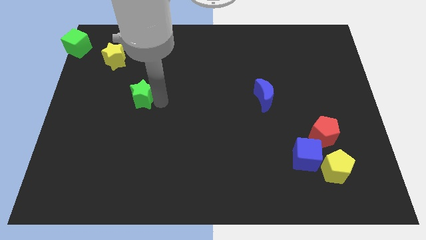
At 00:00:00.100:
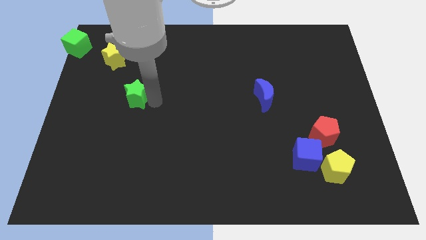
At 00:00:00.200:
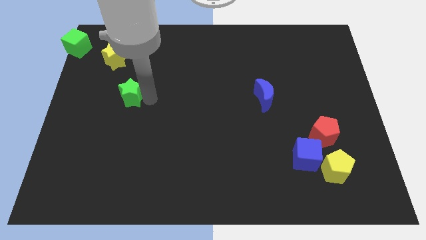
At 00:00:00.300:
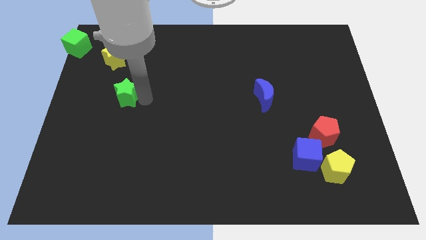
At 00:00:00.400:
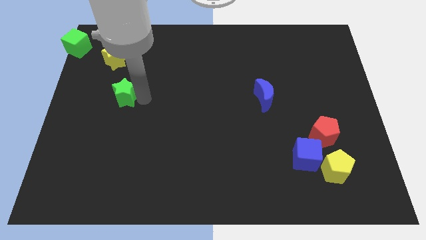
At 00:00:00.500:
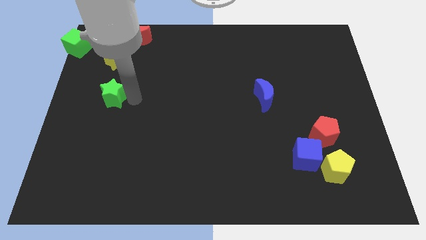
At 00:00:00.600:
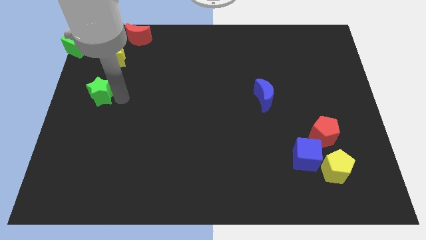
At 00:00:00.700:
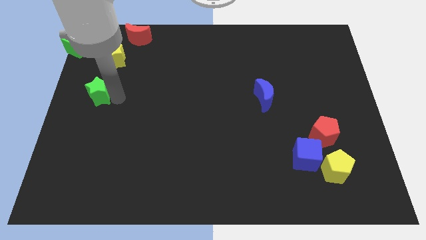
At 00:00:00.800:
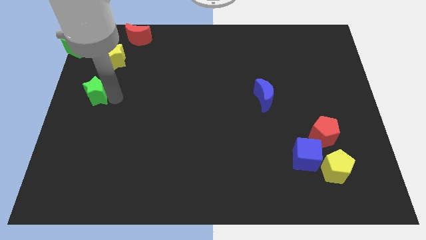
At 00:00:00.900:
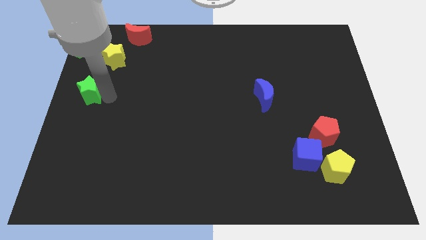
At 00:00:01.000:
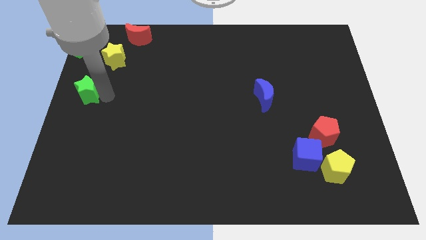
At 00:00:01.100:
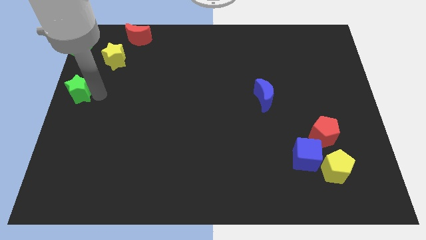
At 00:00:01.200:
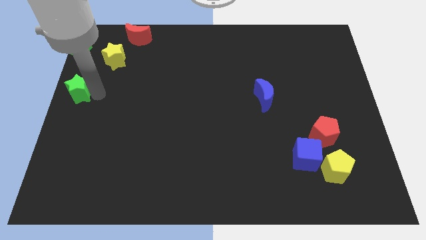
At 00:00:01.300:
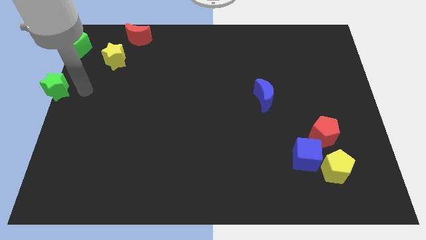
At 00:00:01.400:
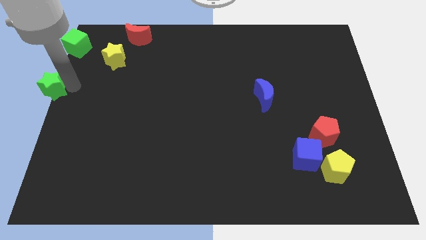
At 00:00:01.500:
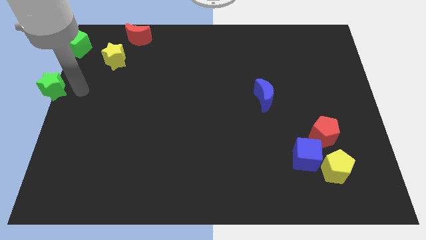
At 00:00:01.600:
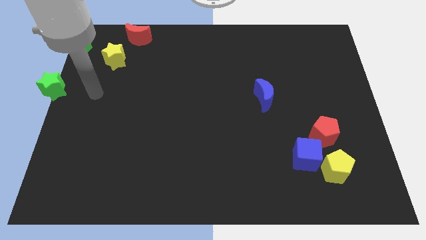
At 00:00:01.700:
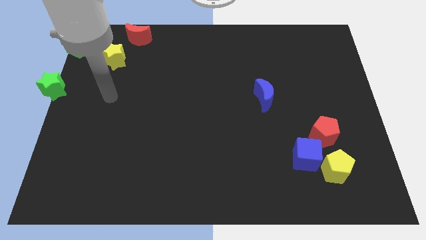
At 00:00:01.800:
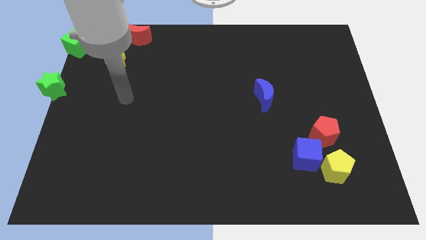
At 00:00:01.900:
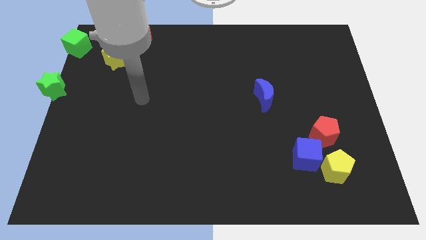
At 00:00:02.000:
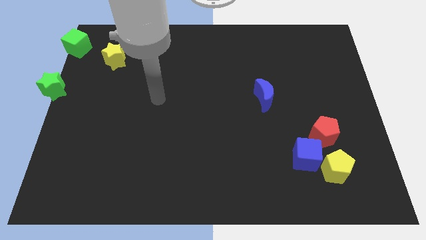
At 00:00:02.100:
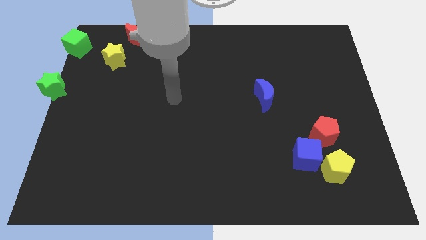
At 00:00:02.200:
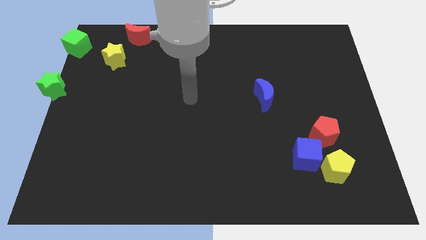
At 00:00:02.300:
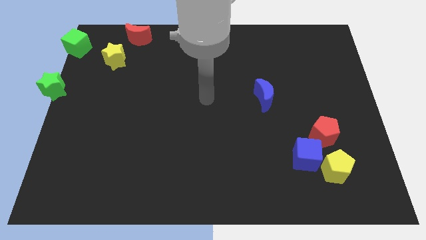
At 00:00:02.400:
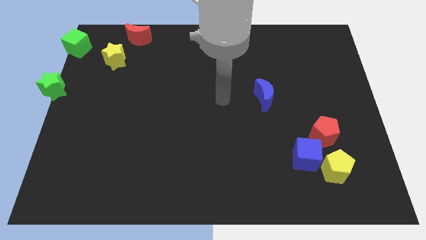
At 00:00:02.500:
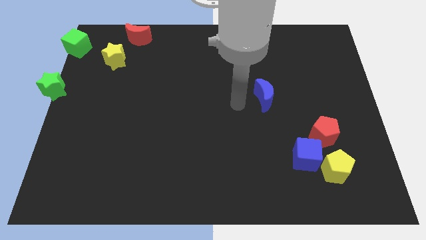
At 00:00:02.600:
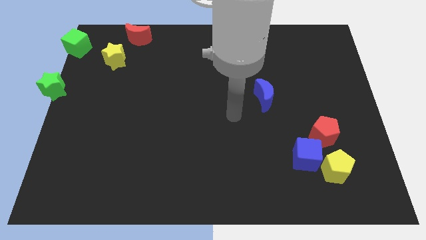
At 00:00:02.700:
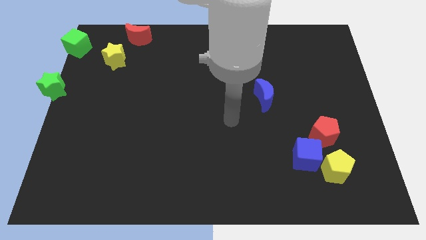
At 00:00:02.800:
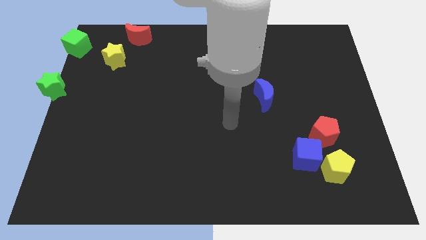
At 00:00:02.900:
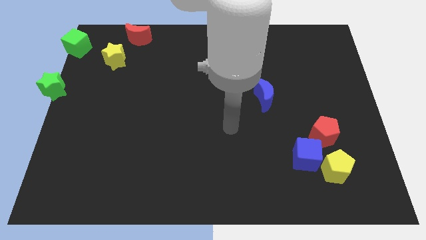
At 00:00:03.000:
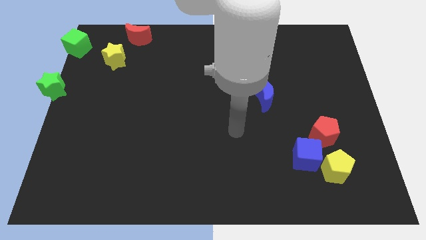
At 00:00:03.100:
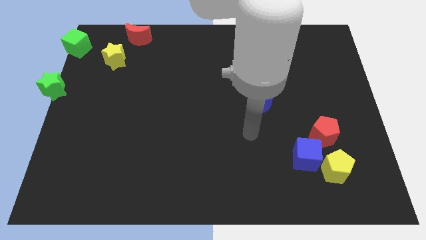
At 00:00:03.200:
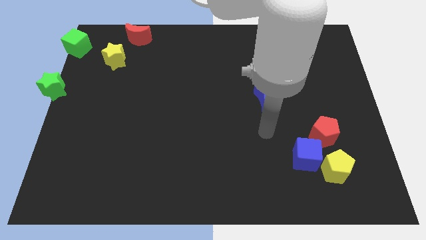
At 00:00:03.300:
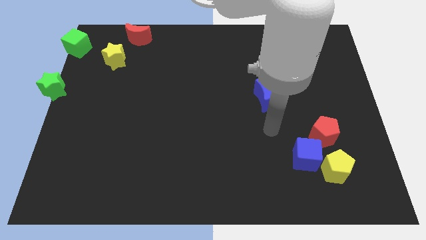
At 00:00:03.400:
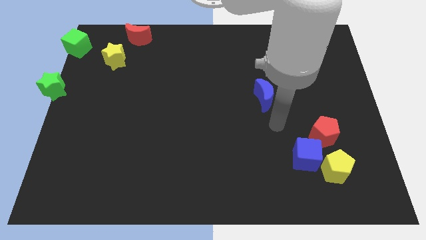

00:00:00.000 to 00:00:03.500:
move green star below the green cube

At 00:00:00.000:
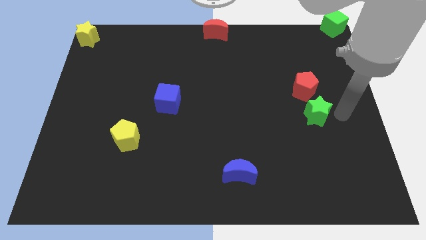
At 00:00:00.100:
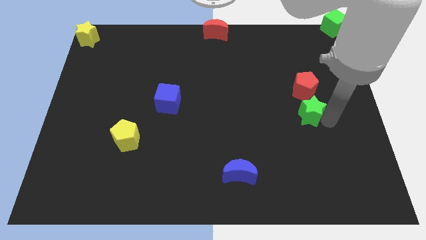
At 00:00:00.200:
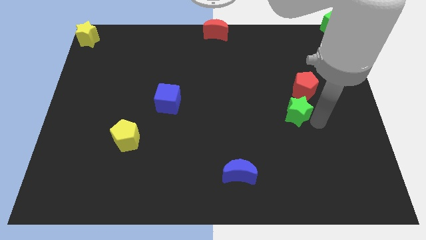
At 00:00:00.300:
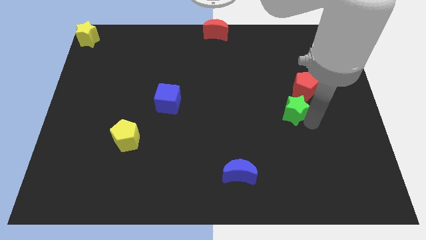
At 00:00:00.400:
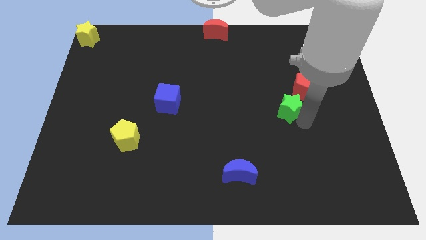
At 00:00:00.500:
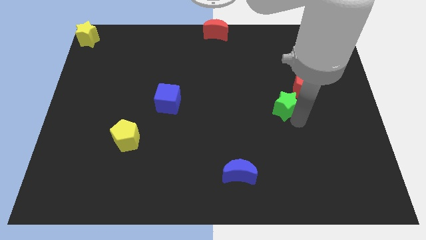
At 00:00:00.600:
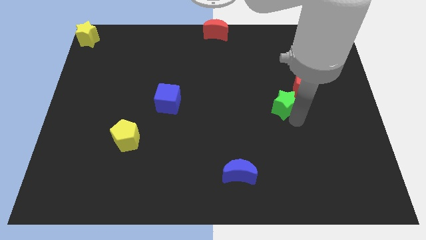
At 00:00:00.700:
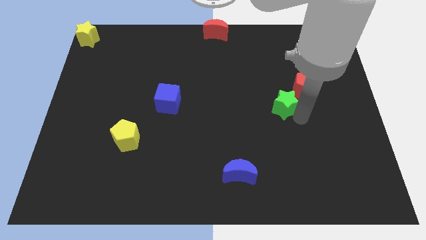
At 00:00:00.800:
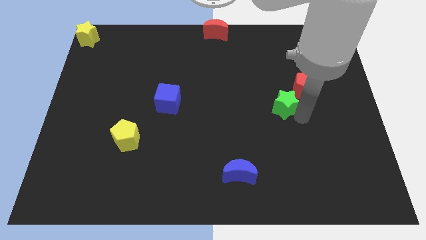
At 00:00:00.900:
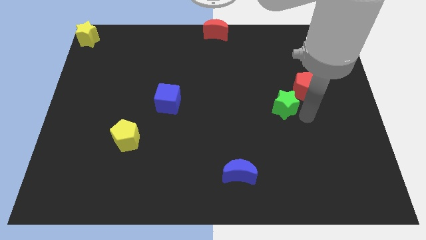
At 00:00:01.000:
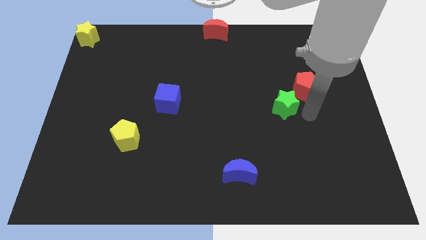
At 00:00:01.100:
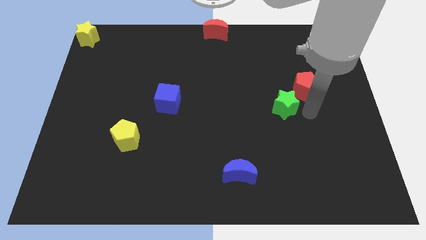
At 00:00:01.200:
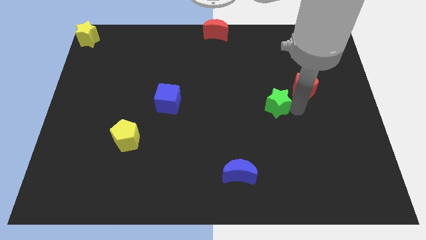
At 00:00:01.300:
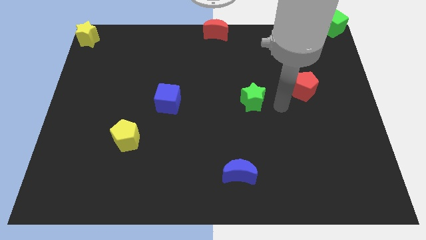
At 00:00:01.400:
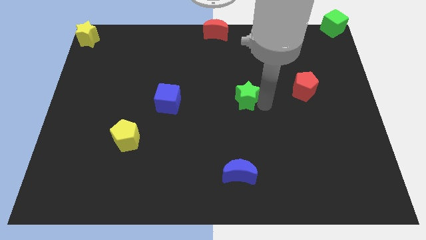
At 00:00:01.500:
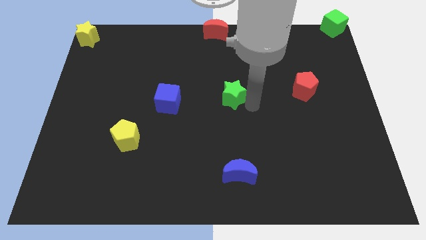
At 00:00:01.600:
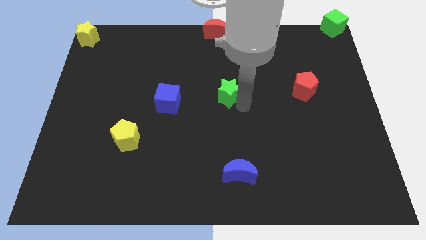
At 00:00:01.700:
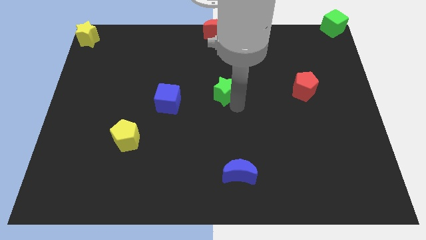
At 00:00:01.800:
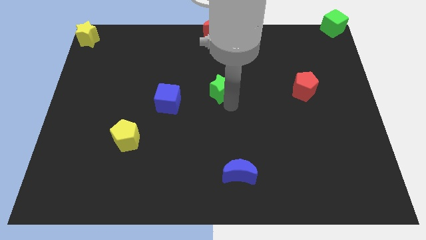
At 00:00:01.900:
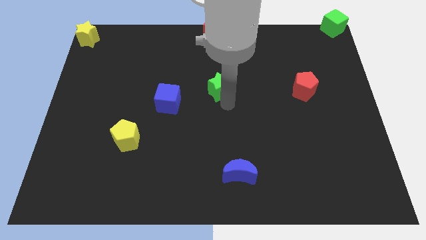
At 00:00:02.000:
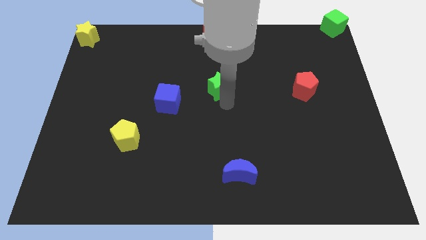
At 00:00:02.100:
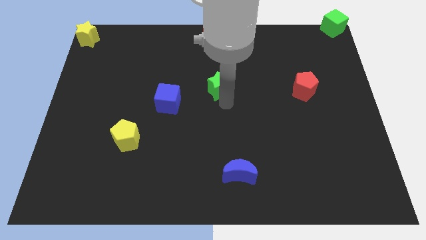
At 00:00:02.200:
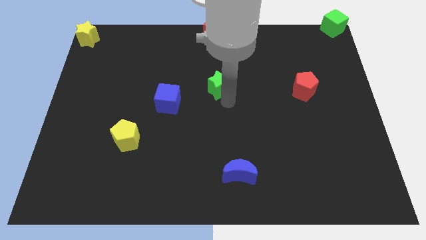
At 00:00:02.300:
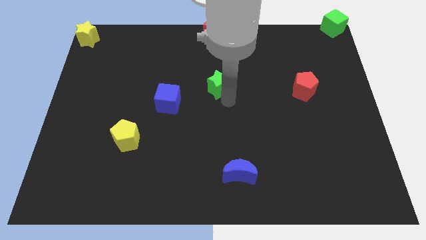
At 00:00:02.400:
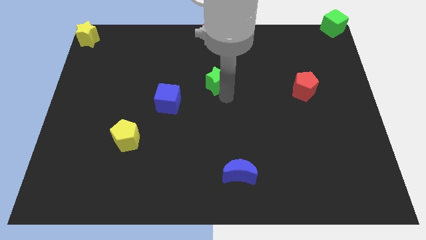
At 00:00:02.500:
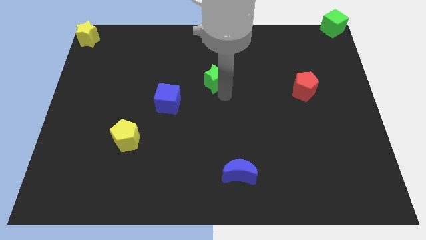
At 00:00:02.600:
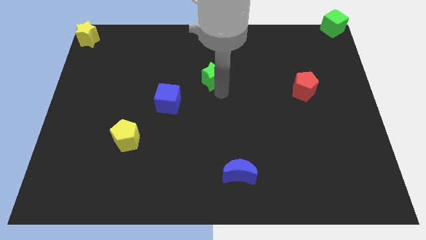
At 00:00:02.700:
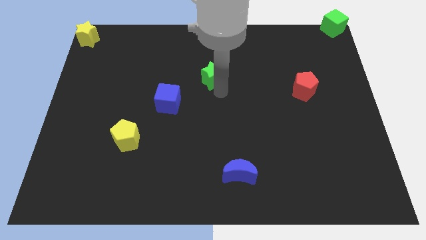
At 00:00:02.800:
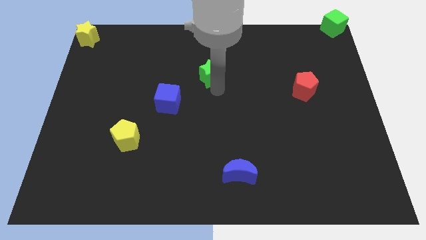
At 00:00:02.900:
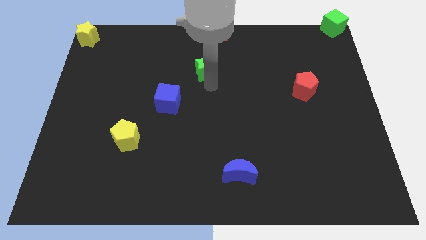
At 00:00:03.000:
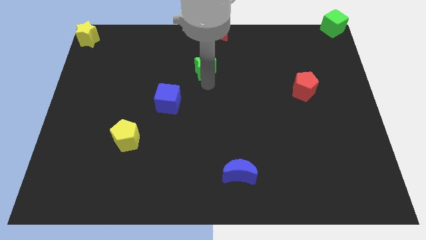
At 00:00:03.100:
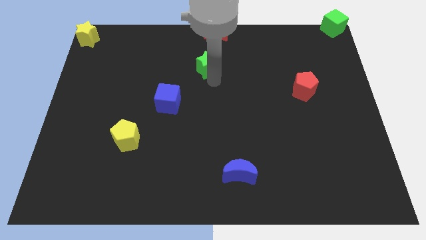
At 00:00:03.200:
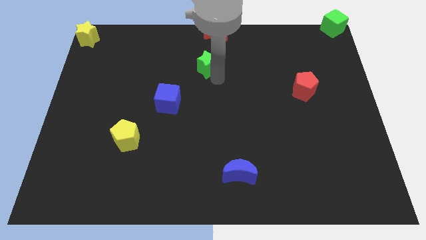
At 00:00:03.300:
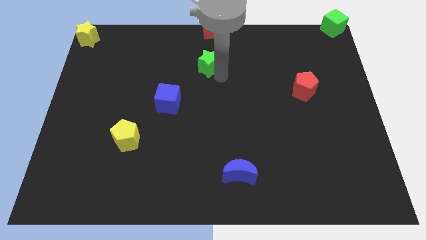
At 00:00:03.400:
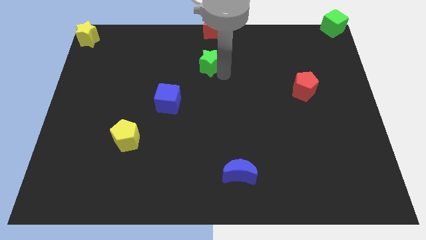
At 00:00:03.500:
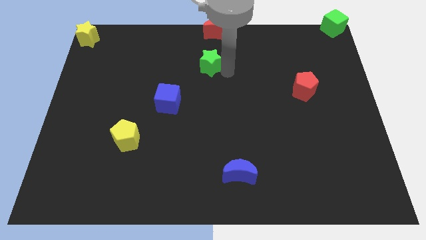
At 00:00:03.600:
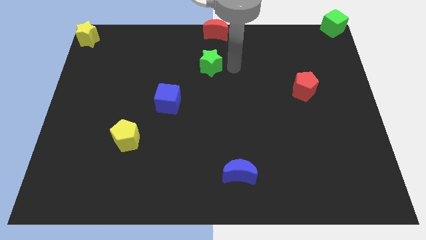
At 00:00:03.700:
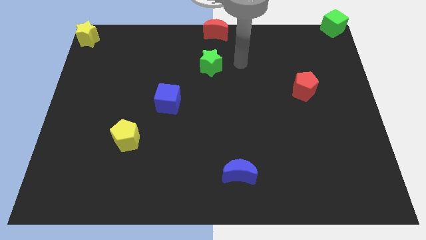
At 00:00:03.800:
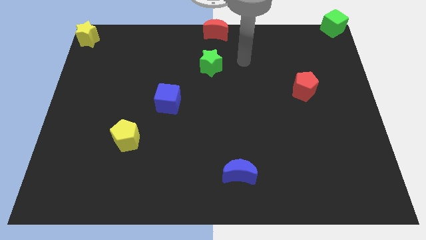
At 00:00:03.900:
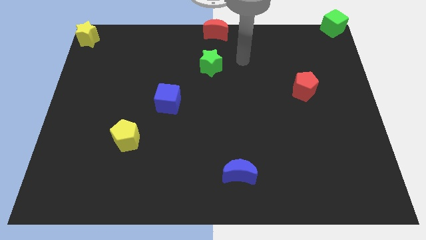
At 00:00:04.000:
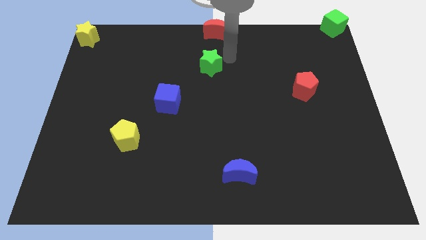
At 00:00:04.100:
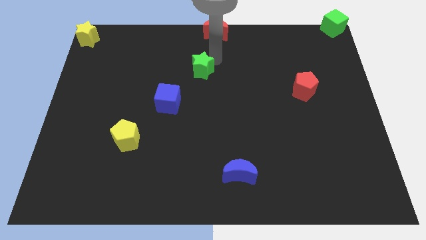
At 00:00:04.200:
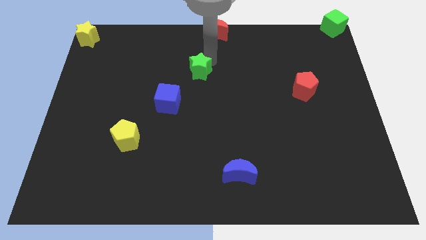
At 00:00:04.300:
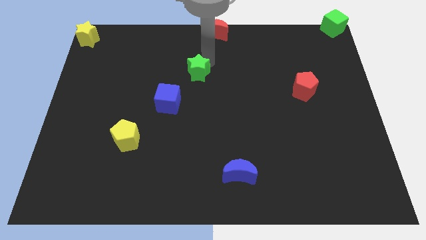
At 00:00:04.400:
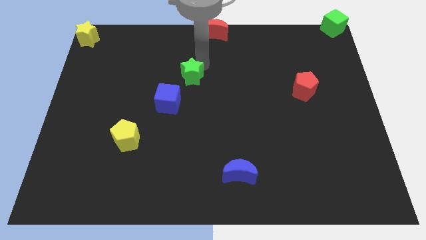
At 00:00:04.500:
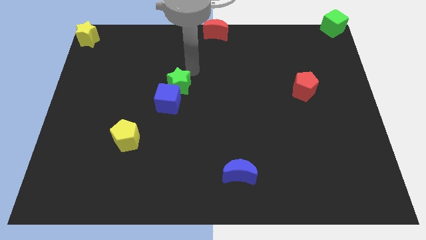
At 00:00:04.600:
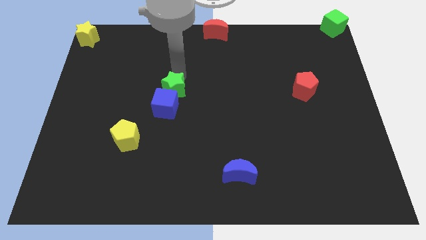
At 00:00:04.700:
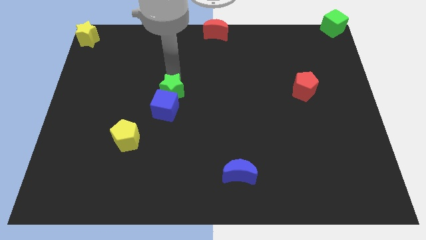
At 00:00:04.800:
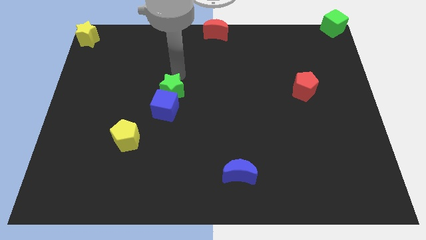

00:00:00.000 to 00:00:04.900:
move the green star above the blue cube

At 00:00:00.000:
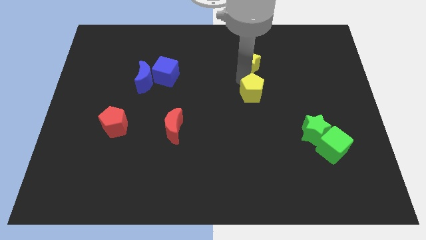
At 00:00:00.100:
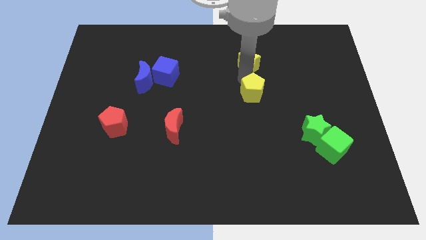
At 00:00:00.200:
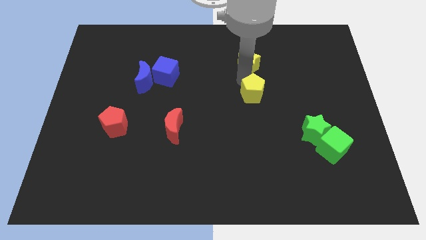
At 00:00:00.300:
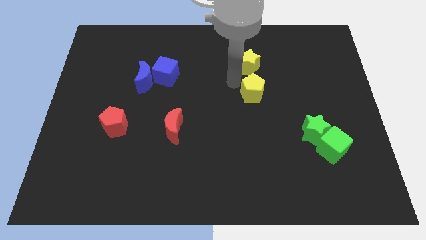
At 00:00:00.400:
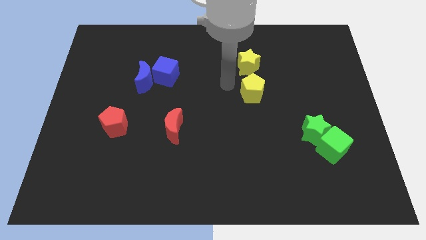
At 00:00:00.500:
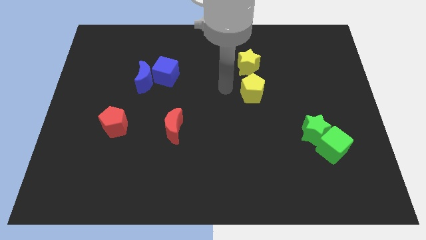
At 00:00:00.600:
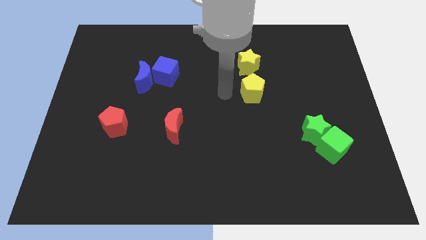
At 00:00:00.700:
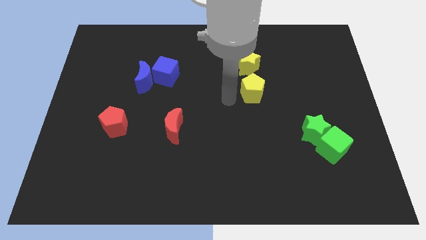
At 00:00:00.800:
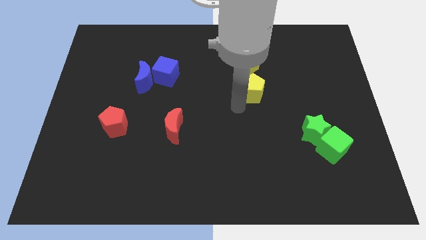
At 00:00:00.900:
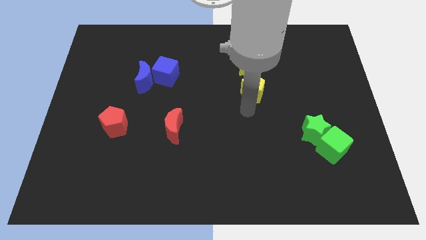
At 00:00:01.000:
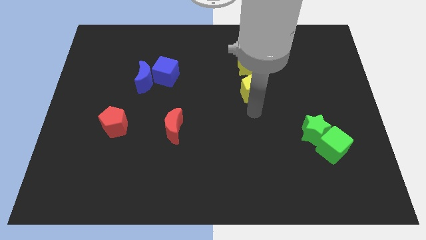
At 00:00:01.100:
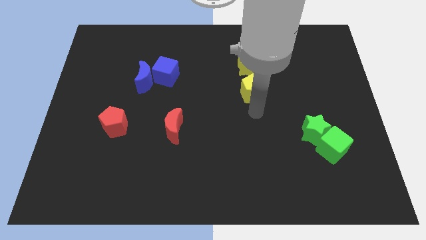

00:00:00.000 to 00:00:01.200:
touch the bottom side of the yellow pentagon
